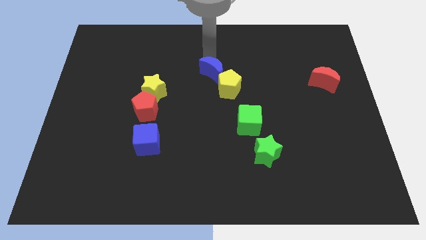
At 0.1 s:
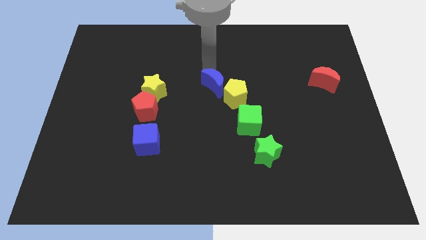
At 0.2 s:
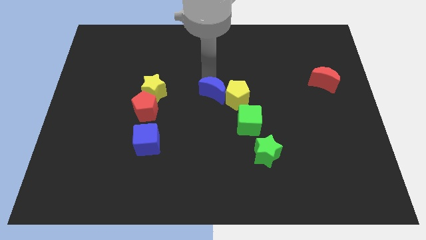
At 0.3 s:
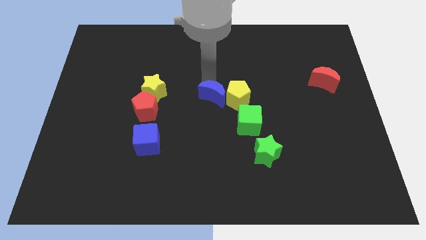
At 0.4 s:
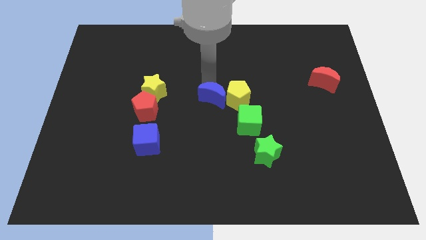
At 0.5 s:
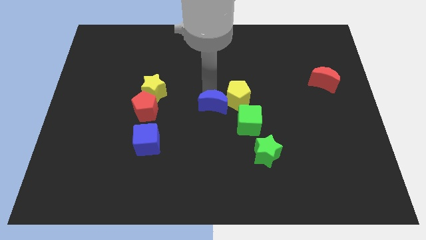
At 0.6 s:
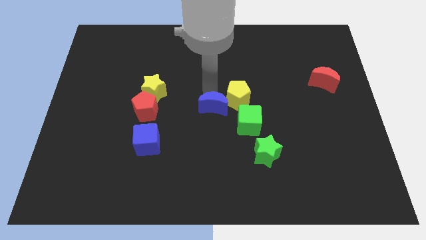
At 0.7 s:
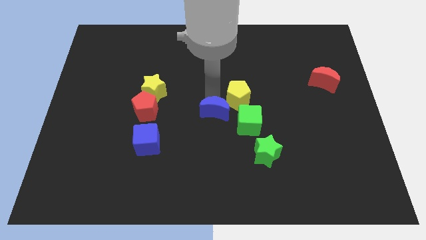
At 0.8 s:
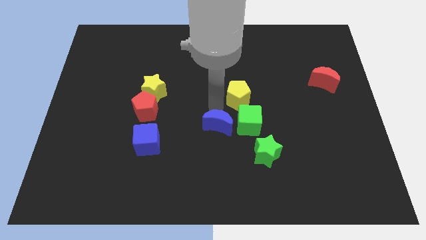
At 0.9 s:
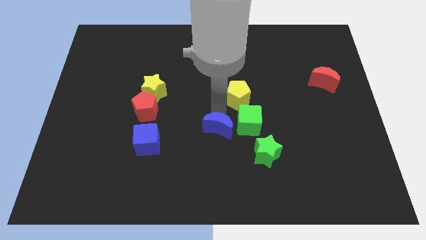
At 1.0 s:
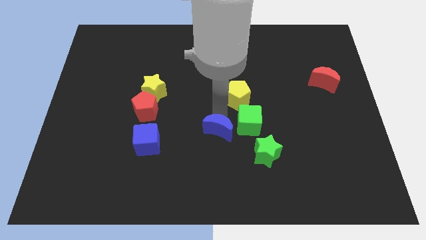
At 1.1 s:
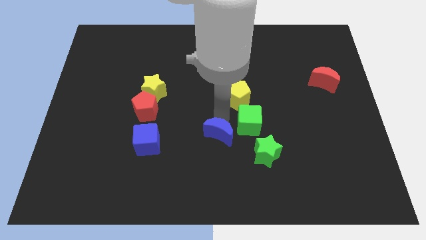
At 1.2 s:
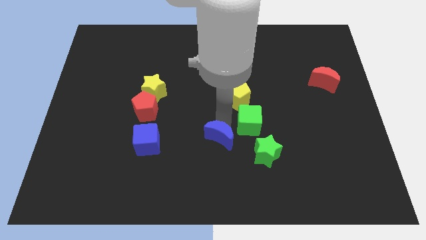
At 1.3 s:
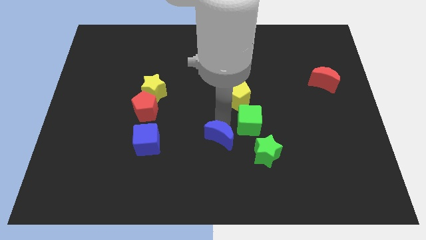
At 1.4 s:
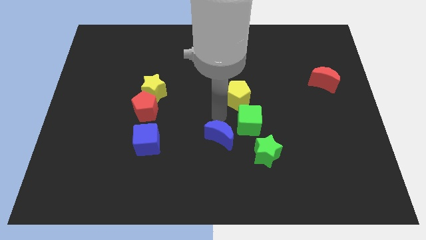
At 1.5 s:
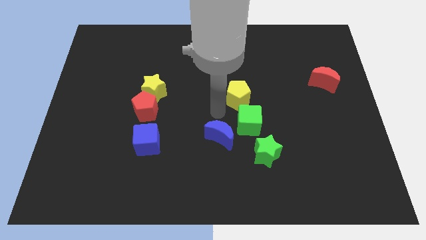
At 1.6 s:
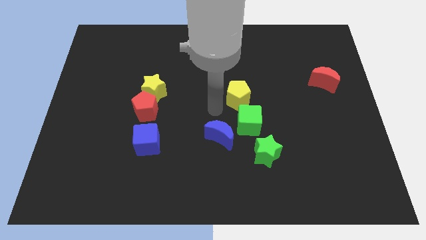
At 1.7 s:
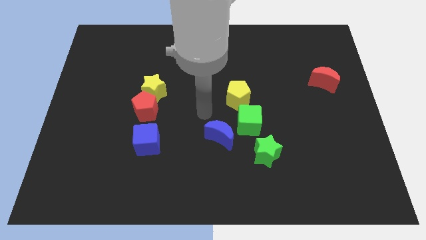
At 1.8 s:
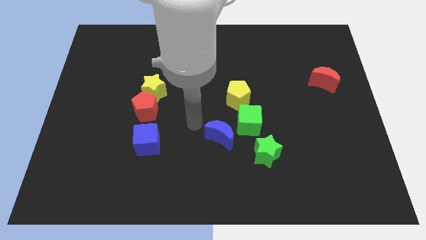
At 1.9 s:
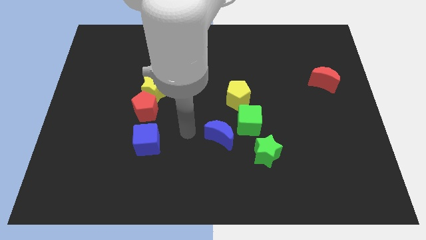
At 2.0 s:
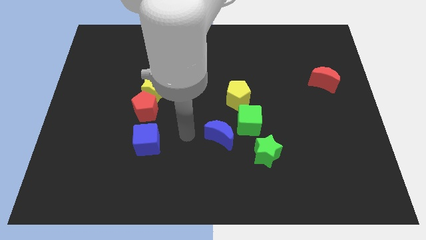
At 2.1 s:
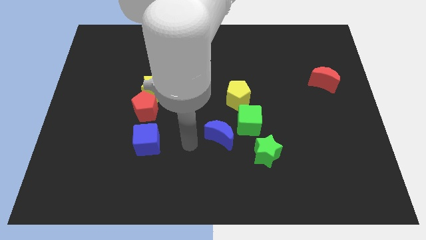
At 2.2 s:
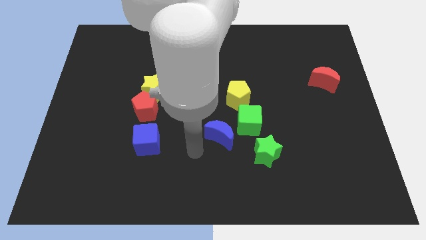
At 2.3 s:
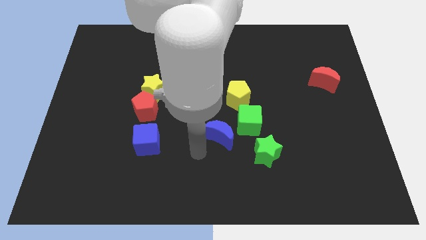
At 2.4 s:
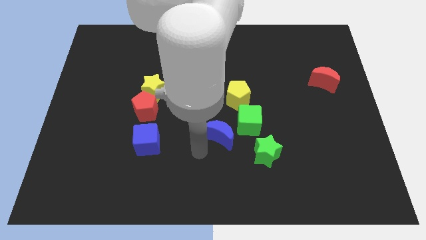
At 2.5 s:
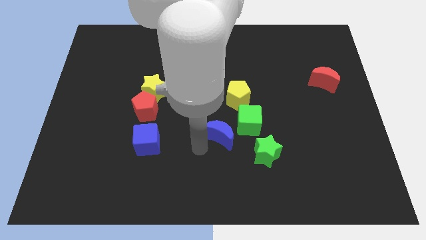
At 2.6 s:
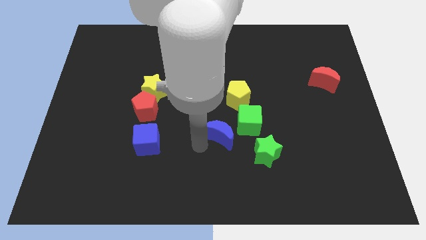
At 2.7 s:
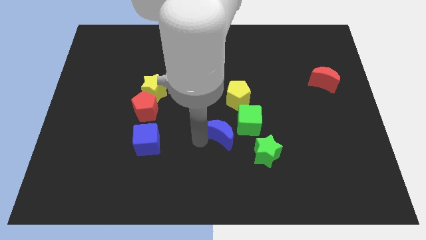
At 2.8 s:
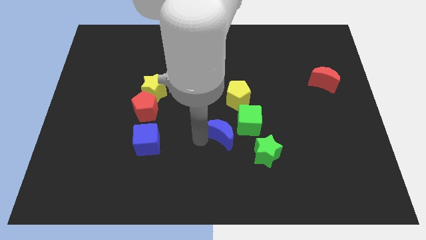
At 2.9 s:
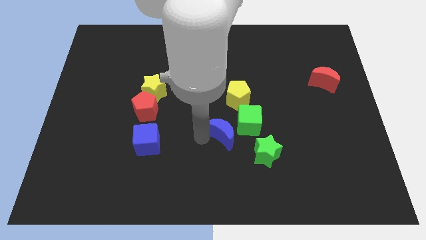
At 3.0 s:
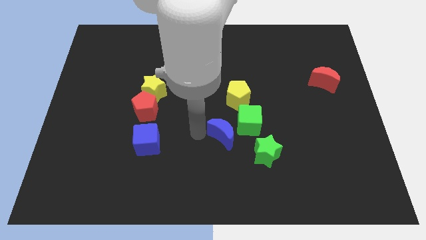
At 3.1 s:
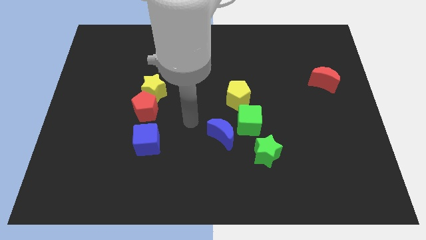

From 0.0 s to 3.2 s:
move the blue crescent diagonally left of the green star

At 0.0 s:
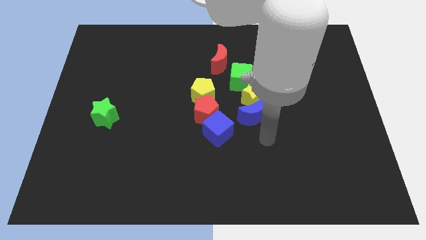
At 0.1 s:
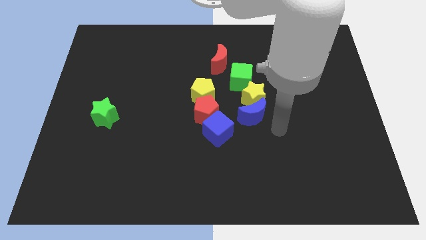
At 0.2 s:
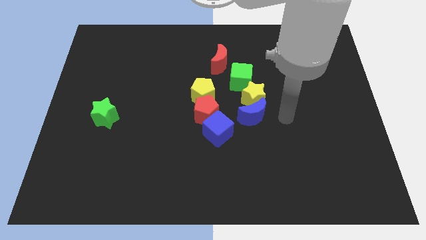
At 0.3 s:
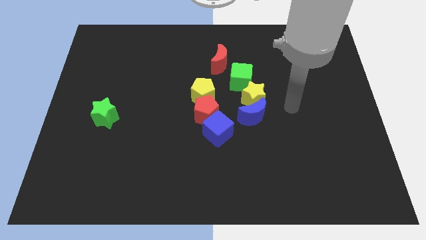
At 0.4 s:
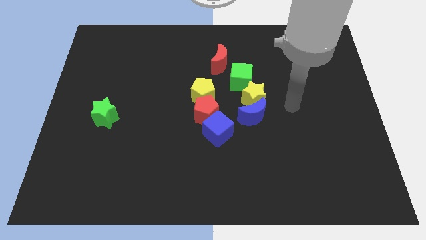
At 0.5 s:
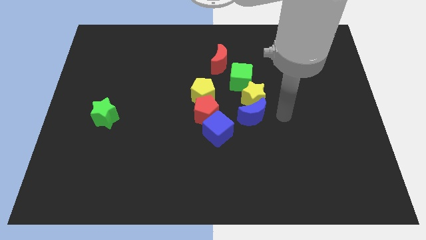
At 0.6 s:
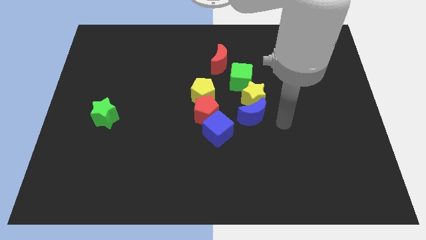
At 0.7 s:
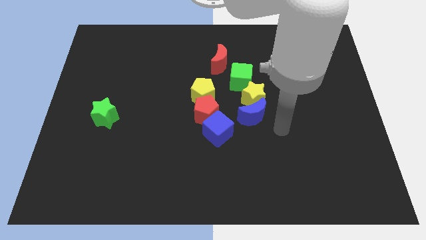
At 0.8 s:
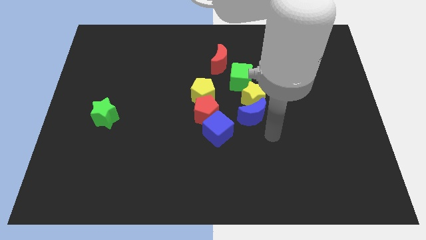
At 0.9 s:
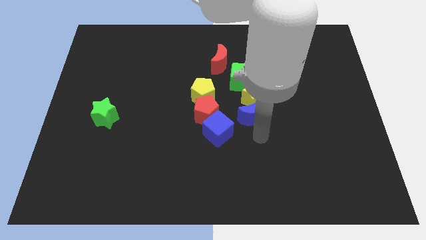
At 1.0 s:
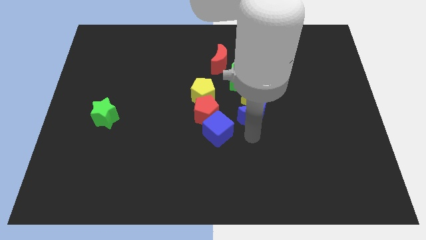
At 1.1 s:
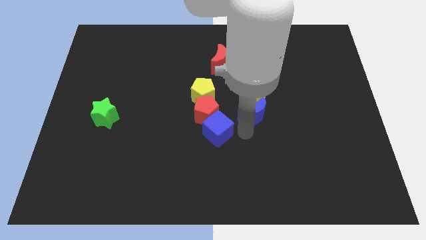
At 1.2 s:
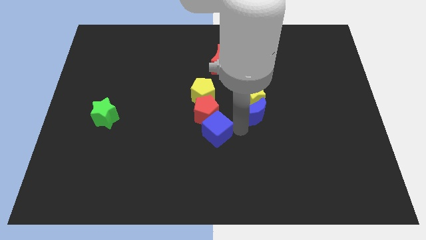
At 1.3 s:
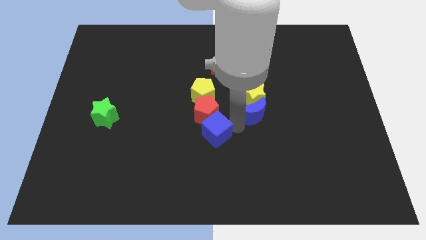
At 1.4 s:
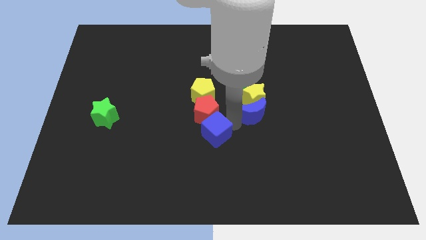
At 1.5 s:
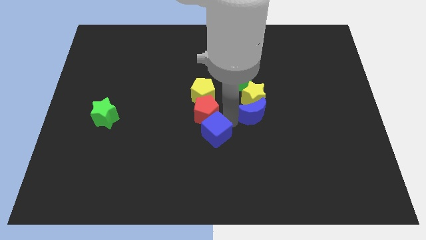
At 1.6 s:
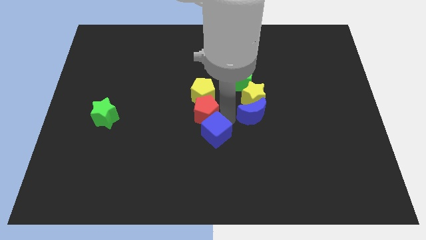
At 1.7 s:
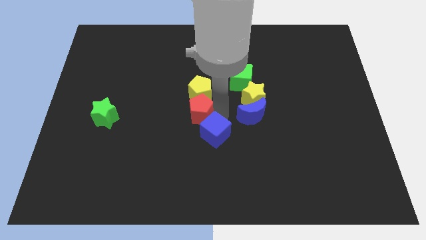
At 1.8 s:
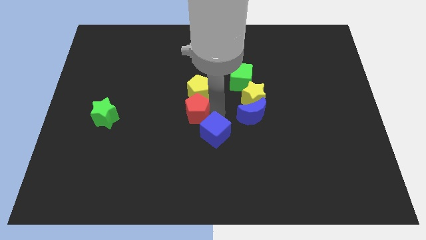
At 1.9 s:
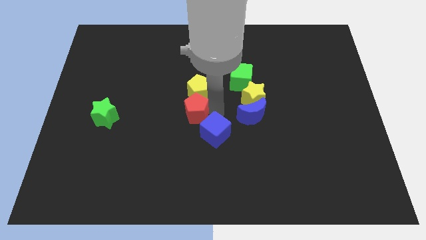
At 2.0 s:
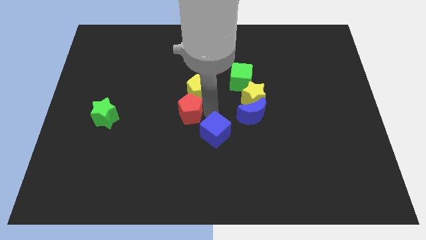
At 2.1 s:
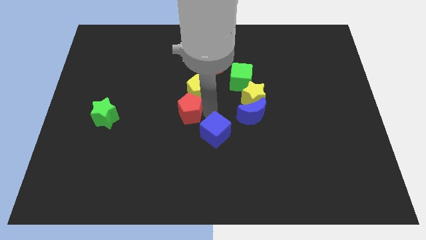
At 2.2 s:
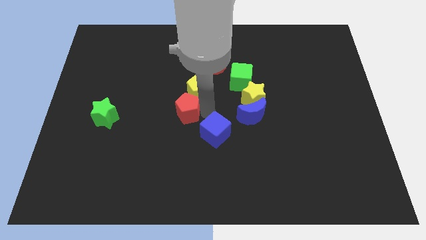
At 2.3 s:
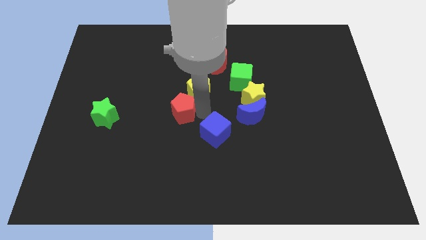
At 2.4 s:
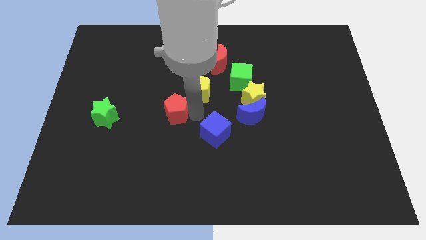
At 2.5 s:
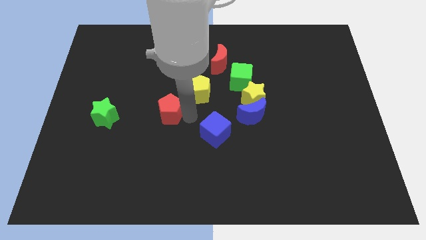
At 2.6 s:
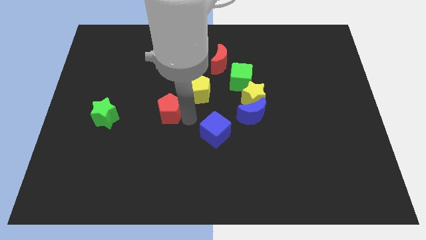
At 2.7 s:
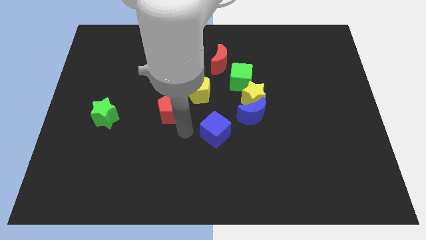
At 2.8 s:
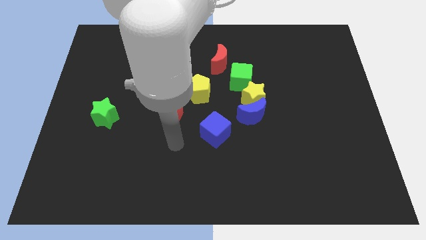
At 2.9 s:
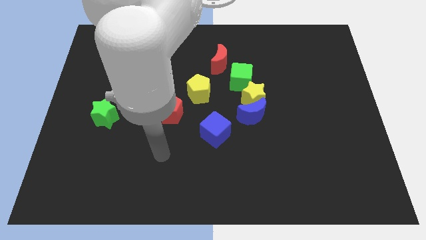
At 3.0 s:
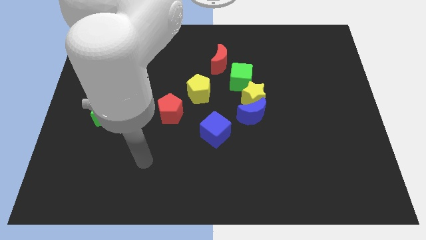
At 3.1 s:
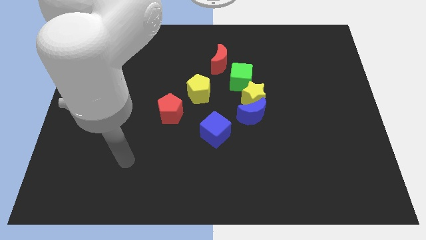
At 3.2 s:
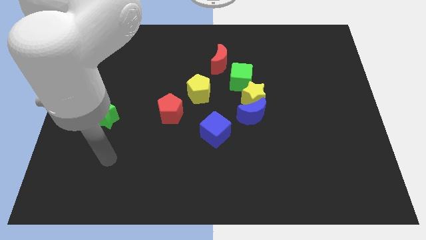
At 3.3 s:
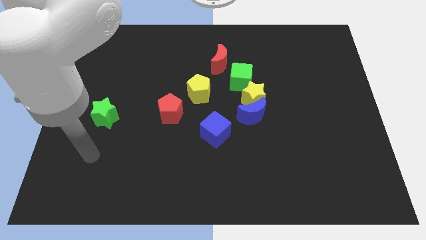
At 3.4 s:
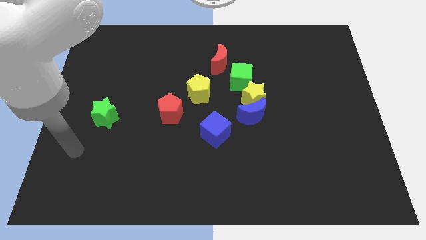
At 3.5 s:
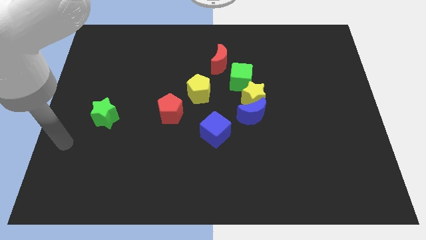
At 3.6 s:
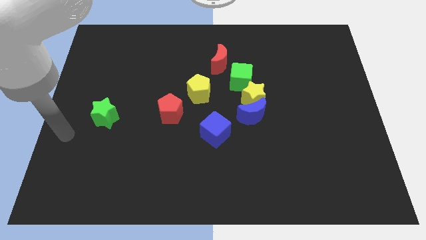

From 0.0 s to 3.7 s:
separate the red pentagon from yellow pentagon

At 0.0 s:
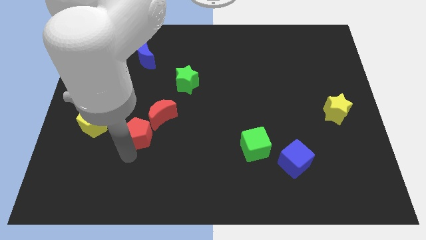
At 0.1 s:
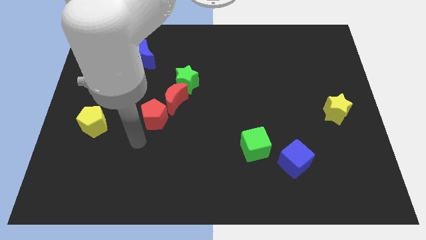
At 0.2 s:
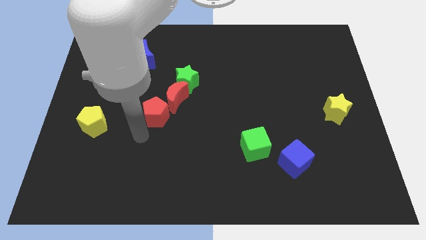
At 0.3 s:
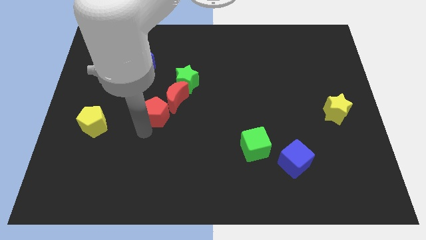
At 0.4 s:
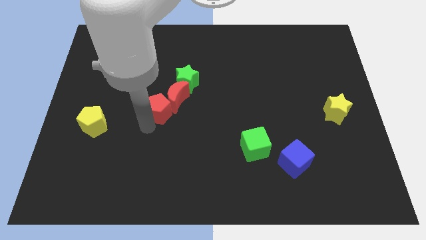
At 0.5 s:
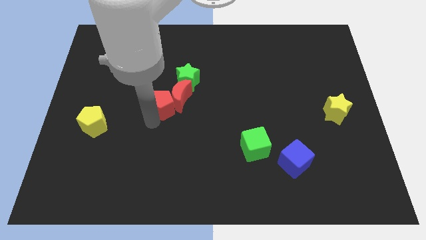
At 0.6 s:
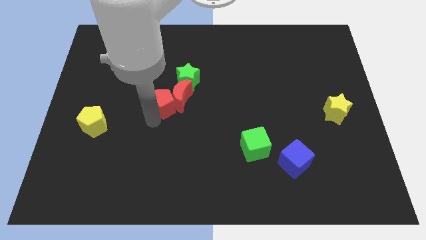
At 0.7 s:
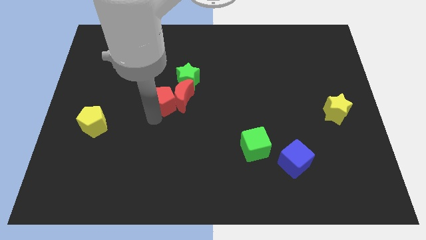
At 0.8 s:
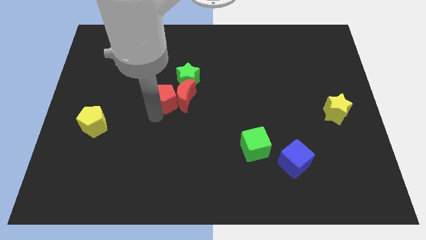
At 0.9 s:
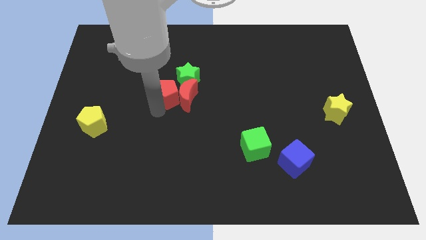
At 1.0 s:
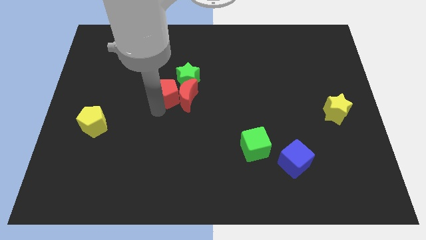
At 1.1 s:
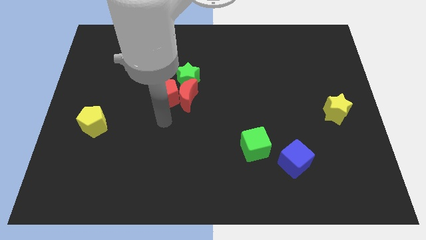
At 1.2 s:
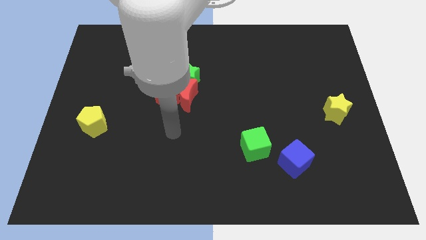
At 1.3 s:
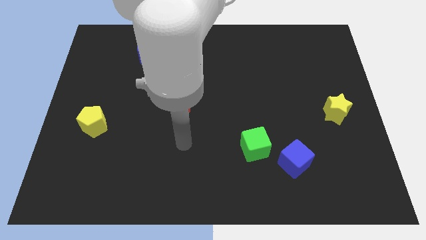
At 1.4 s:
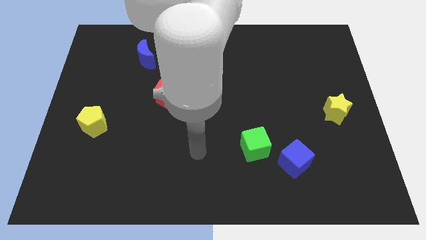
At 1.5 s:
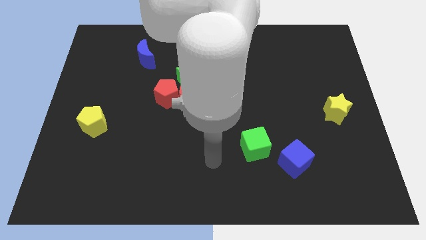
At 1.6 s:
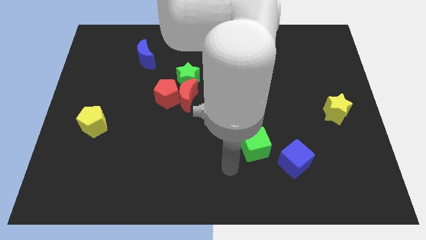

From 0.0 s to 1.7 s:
push the red blocks into the green star

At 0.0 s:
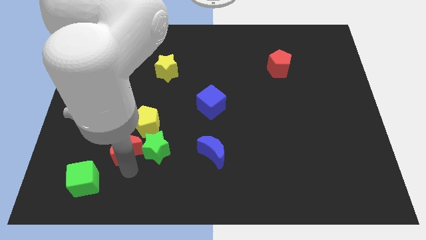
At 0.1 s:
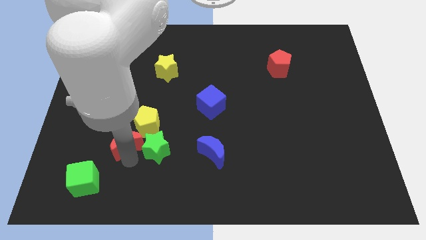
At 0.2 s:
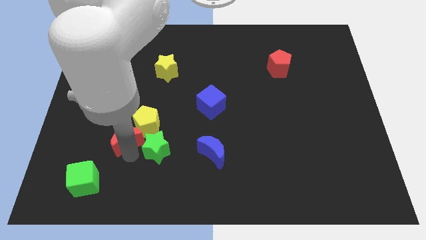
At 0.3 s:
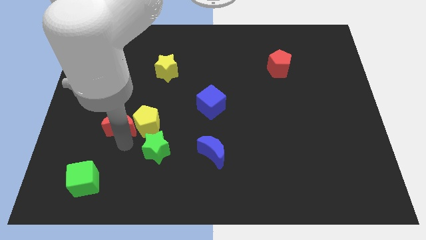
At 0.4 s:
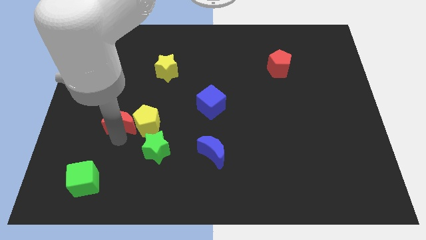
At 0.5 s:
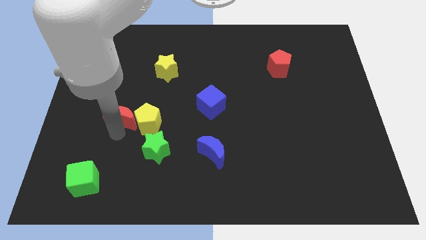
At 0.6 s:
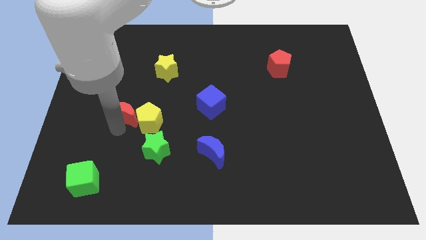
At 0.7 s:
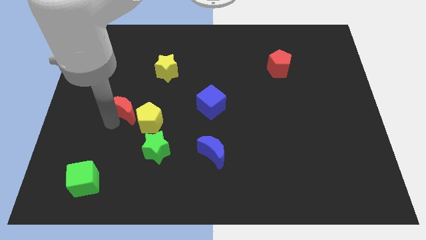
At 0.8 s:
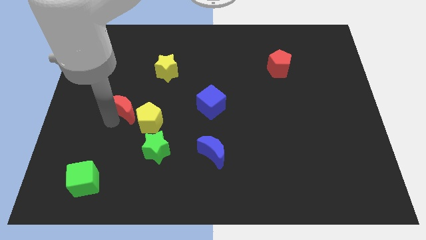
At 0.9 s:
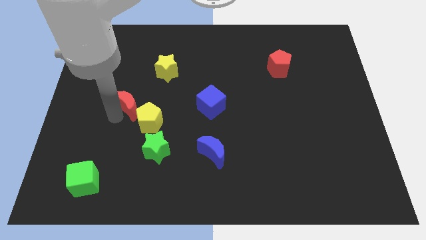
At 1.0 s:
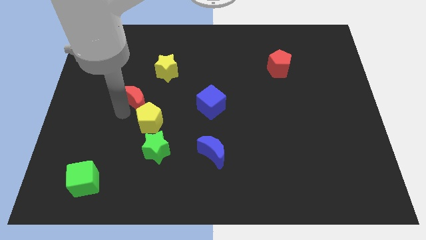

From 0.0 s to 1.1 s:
slide red moon slightly upwards
